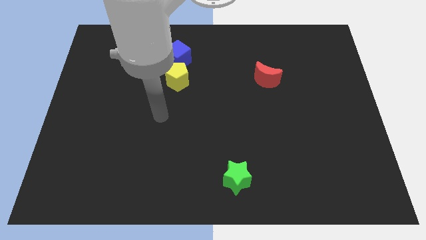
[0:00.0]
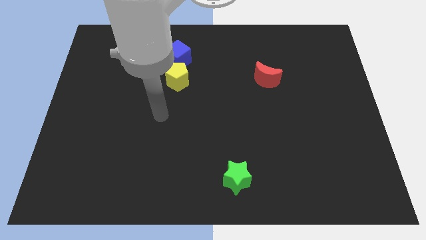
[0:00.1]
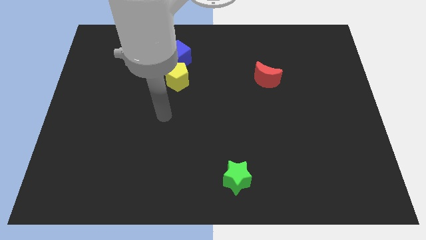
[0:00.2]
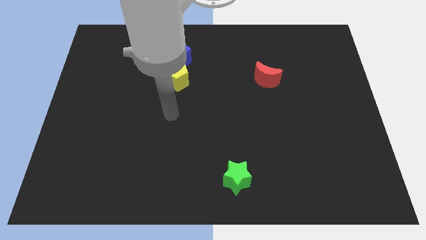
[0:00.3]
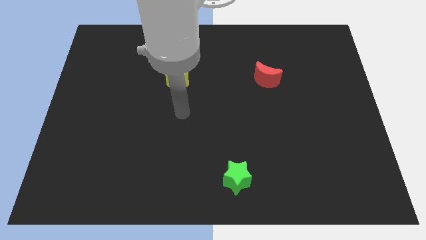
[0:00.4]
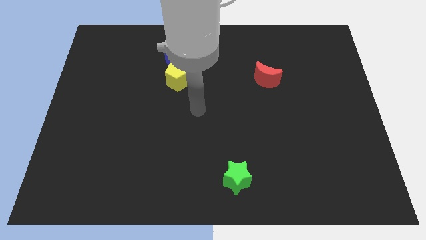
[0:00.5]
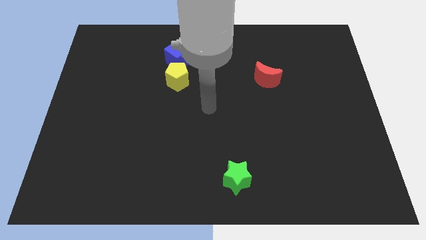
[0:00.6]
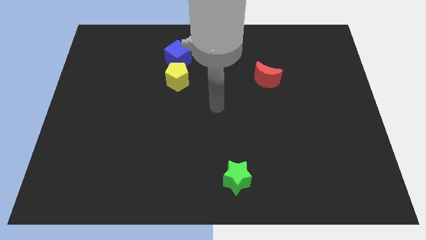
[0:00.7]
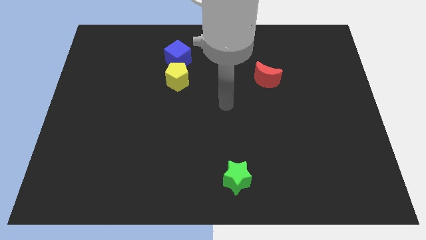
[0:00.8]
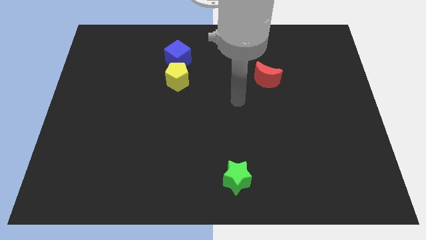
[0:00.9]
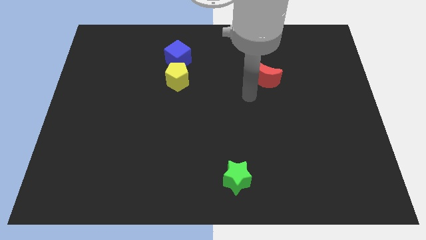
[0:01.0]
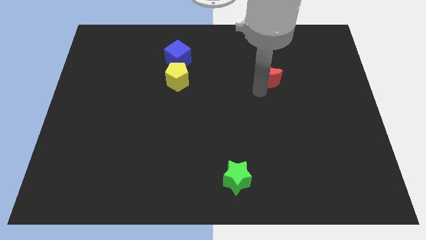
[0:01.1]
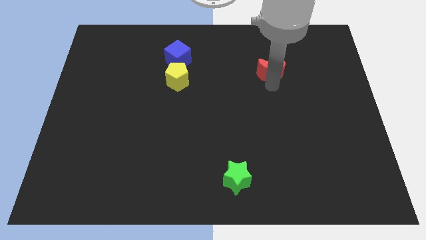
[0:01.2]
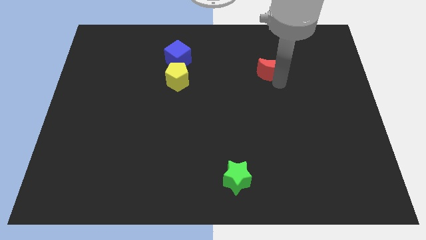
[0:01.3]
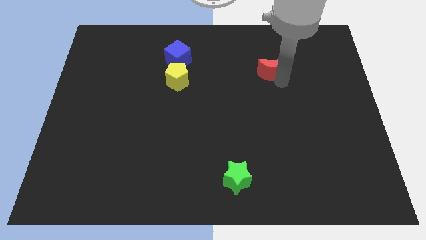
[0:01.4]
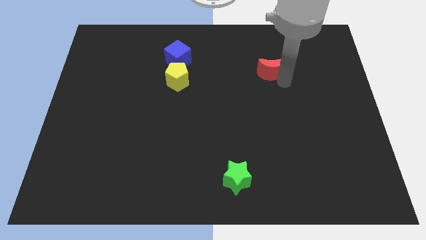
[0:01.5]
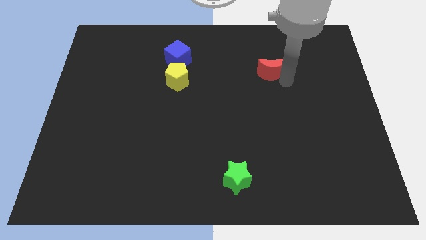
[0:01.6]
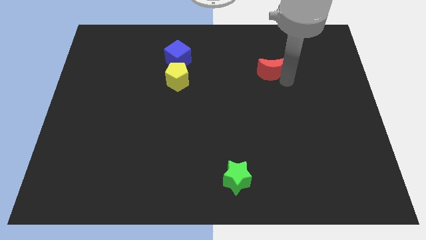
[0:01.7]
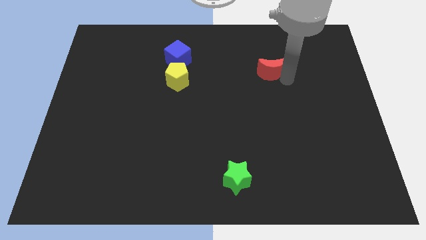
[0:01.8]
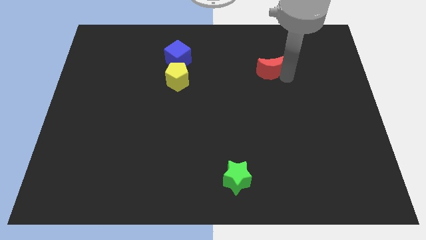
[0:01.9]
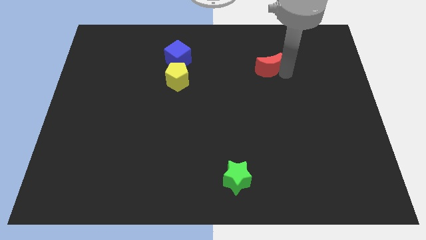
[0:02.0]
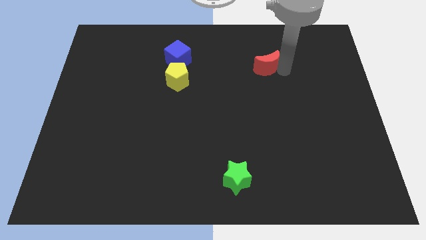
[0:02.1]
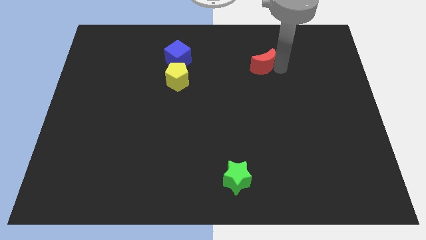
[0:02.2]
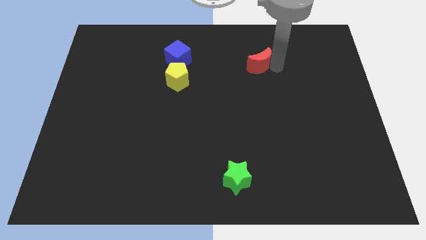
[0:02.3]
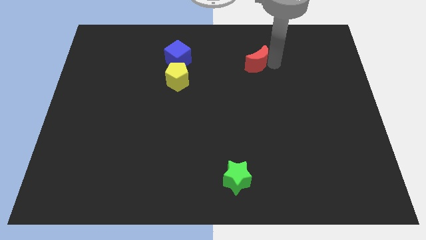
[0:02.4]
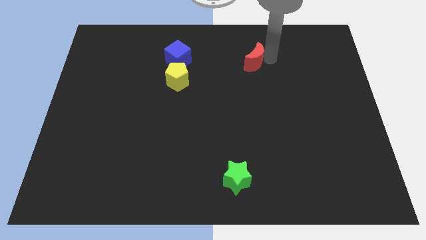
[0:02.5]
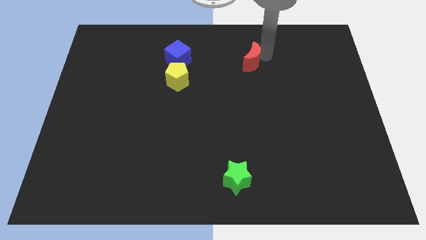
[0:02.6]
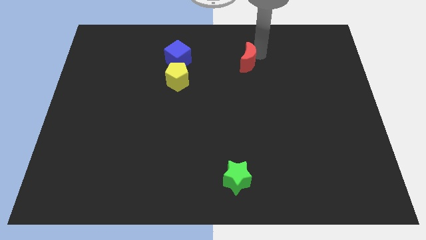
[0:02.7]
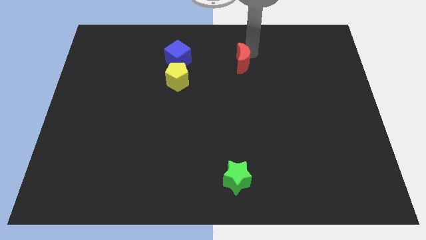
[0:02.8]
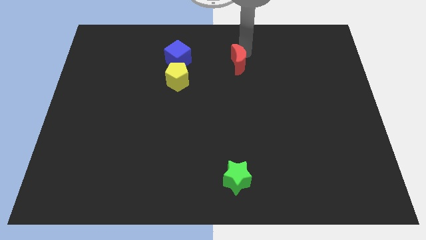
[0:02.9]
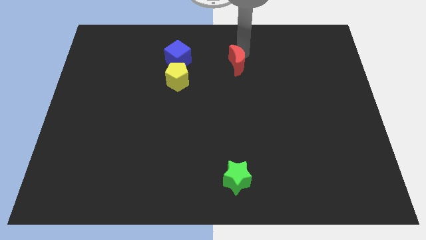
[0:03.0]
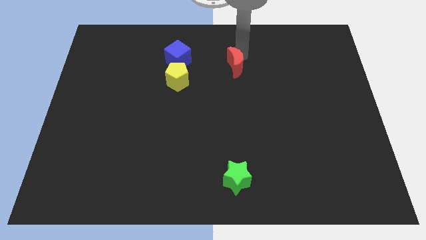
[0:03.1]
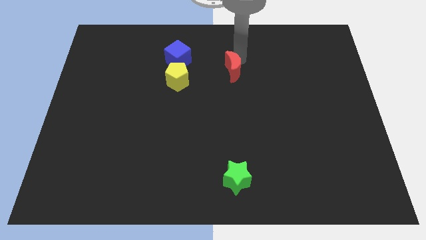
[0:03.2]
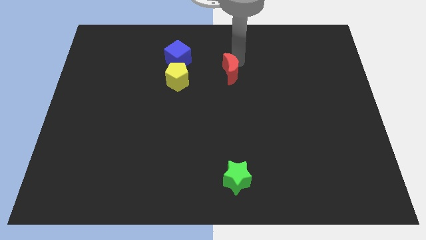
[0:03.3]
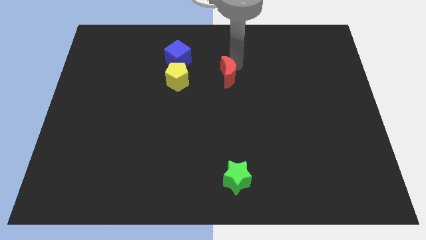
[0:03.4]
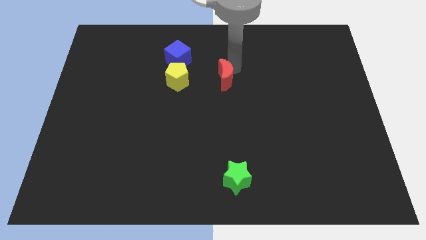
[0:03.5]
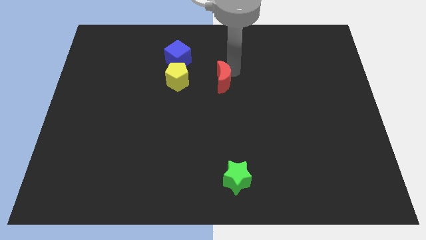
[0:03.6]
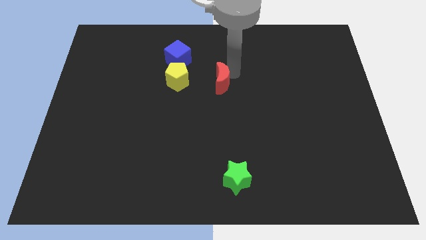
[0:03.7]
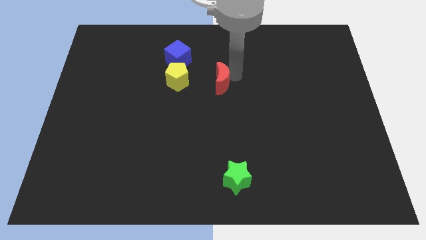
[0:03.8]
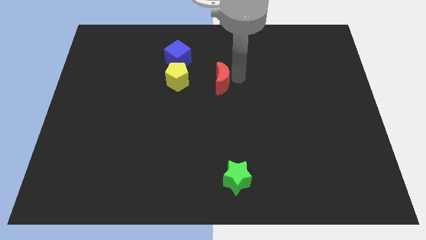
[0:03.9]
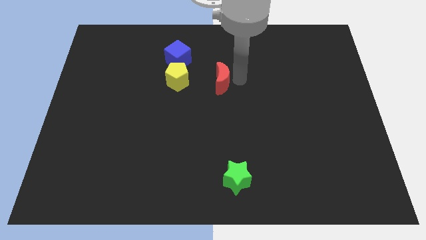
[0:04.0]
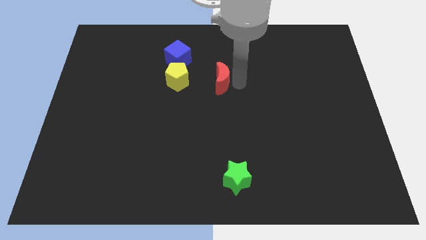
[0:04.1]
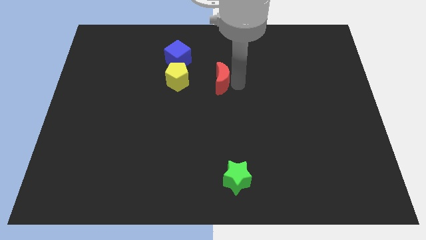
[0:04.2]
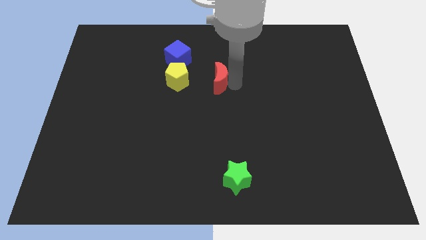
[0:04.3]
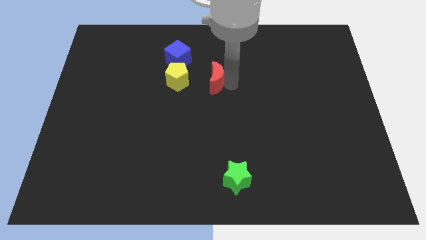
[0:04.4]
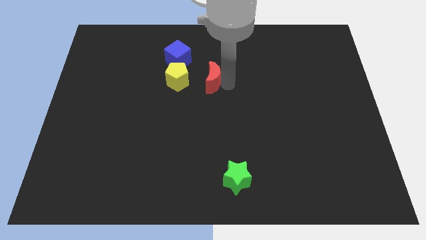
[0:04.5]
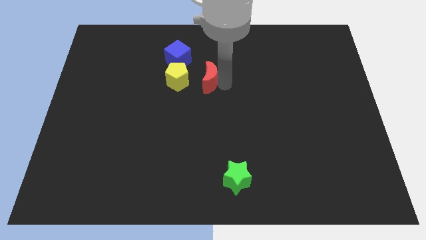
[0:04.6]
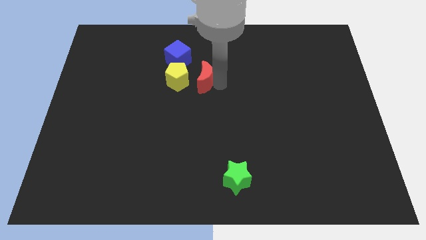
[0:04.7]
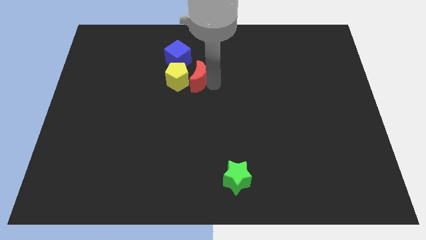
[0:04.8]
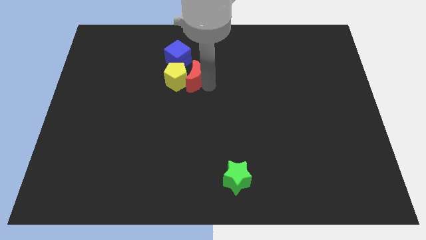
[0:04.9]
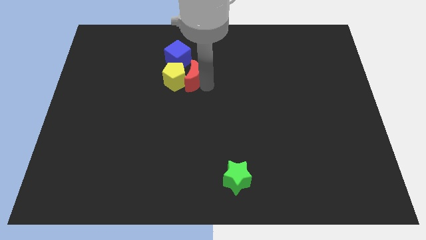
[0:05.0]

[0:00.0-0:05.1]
slide the red block to the yellow block

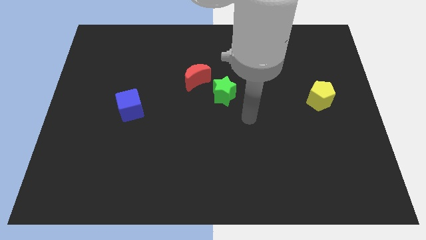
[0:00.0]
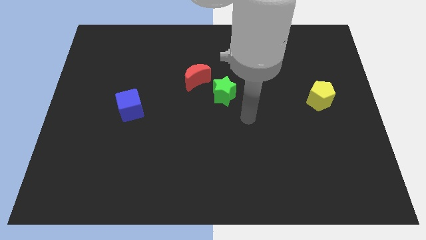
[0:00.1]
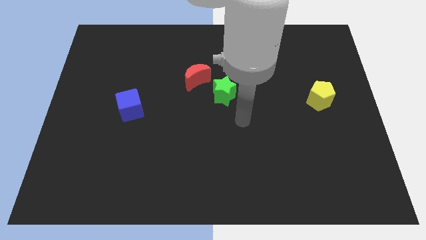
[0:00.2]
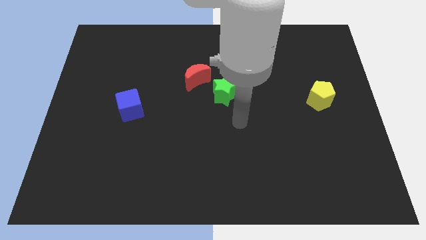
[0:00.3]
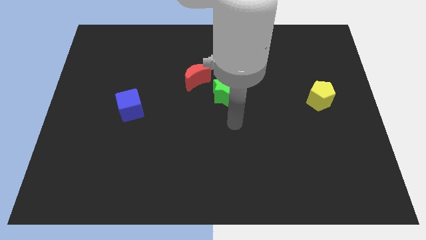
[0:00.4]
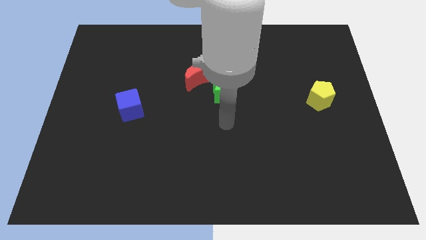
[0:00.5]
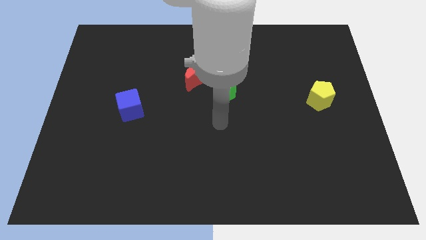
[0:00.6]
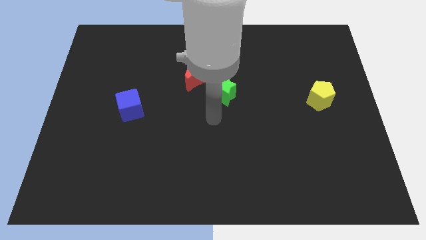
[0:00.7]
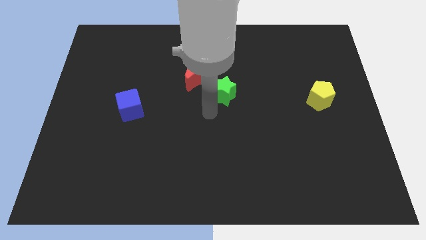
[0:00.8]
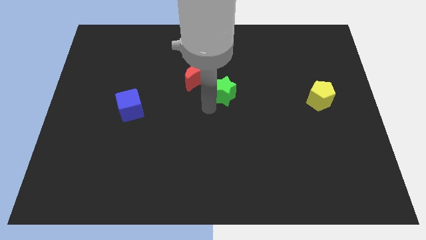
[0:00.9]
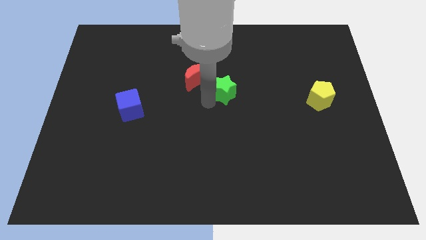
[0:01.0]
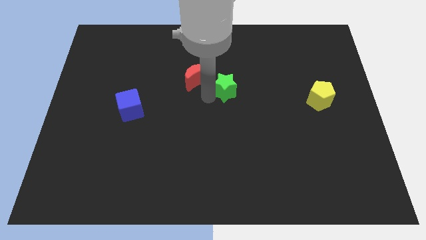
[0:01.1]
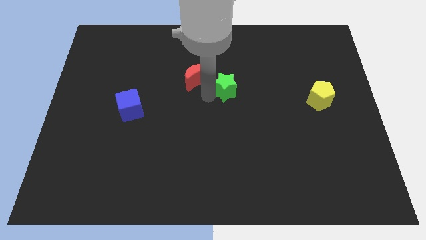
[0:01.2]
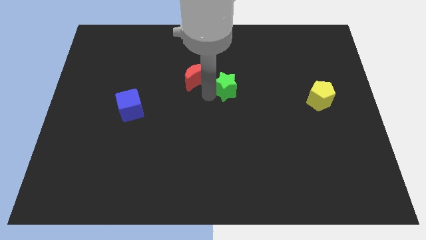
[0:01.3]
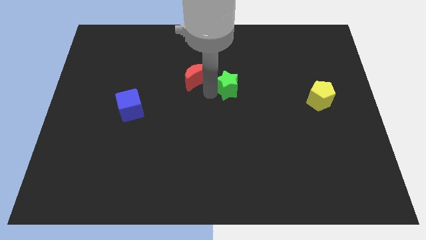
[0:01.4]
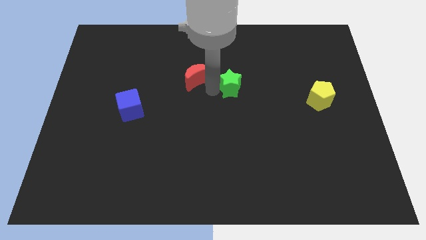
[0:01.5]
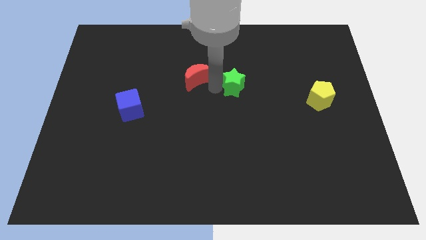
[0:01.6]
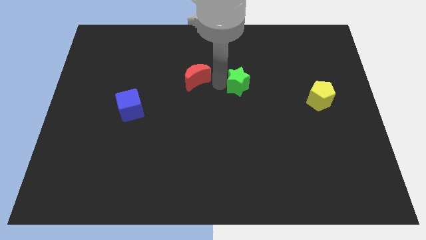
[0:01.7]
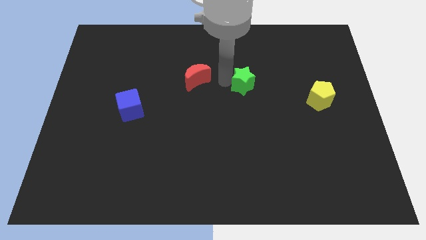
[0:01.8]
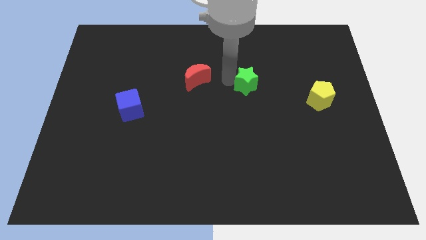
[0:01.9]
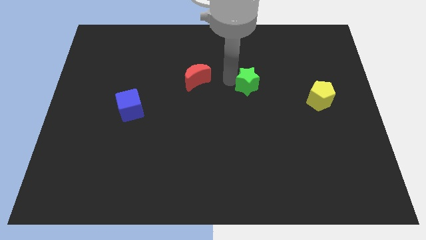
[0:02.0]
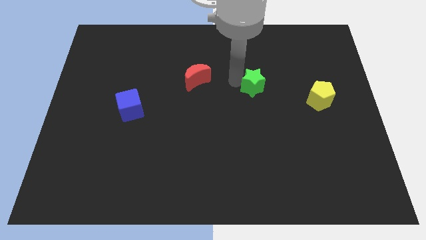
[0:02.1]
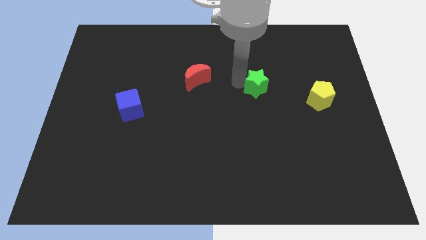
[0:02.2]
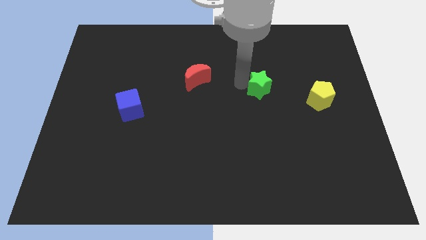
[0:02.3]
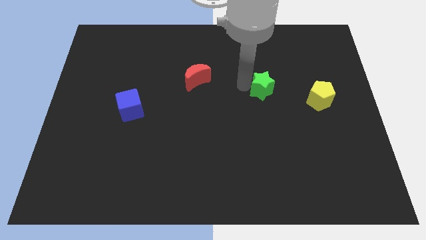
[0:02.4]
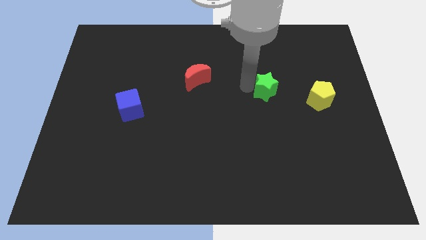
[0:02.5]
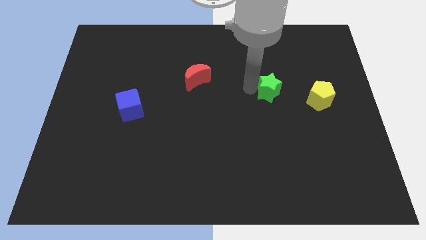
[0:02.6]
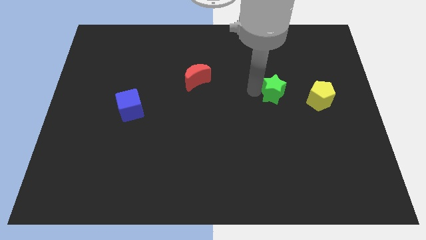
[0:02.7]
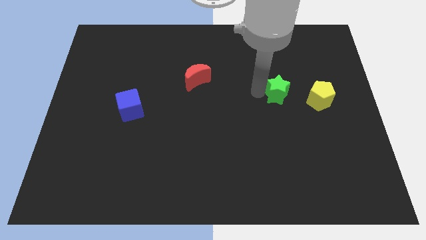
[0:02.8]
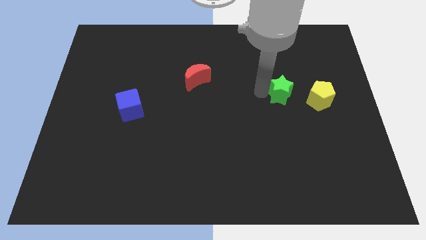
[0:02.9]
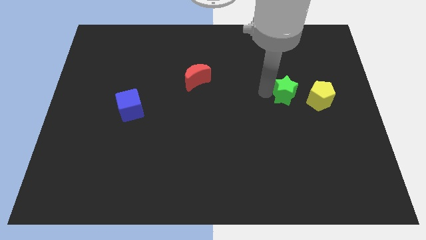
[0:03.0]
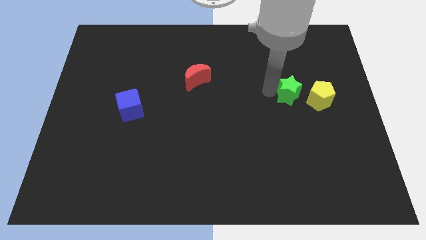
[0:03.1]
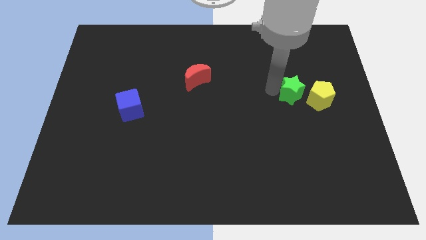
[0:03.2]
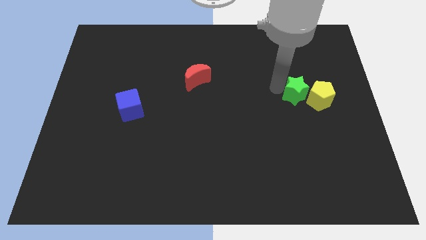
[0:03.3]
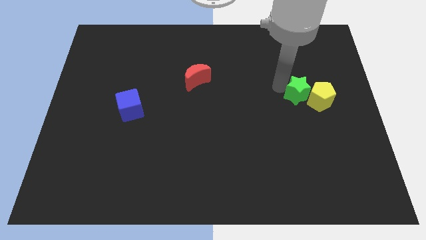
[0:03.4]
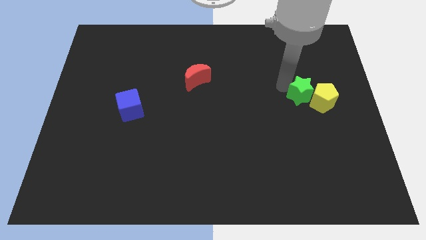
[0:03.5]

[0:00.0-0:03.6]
push the green star towards the yellow block
